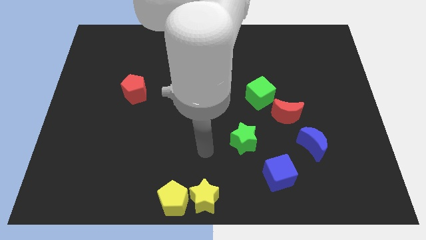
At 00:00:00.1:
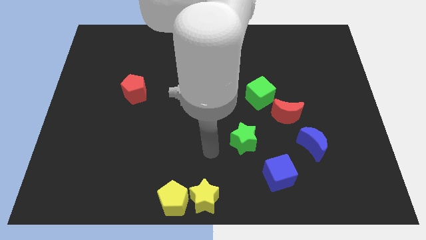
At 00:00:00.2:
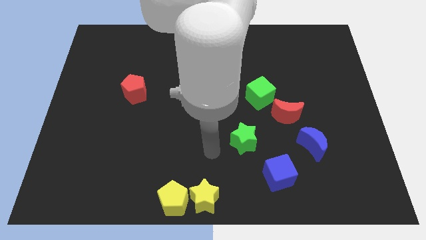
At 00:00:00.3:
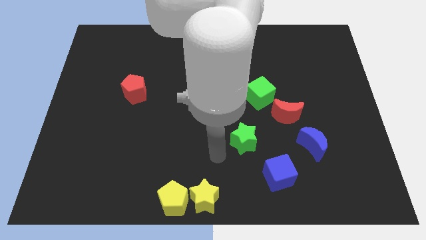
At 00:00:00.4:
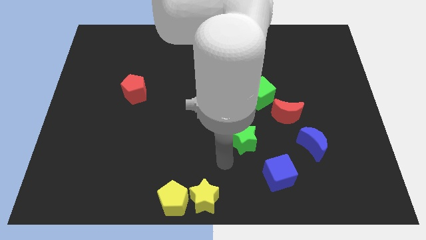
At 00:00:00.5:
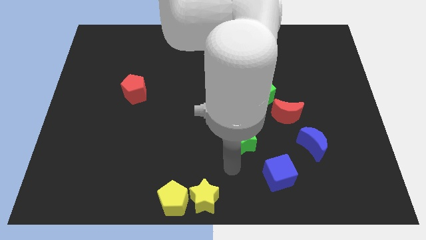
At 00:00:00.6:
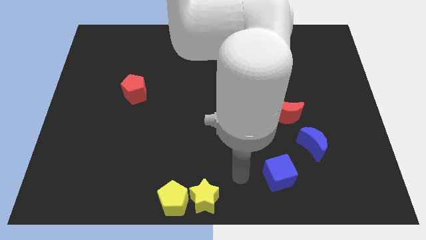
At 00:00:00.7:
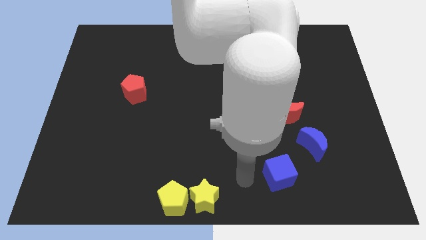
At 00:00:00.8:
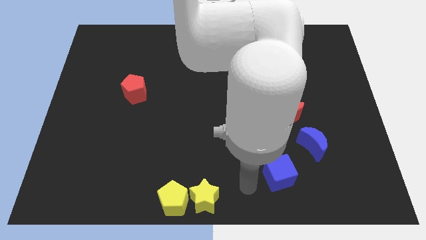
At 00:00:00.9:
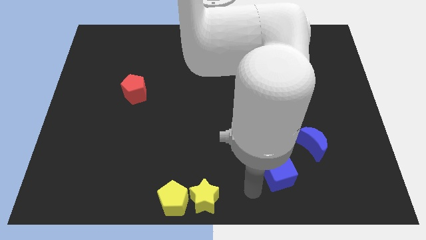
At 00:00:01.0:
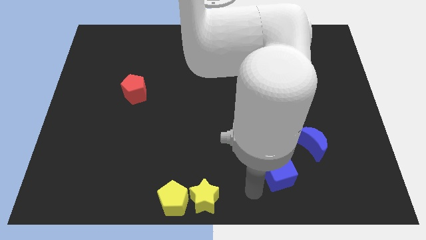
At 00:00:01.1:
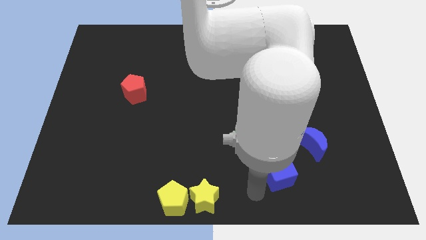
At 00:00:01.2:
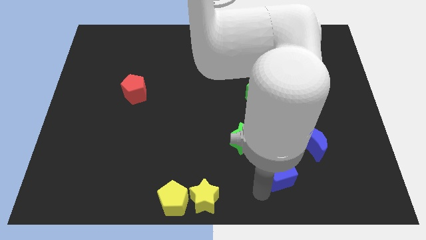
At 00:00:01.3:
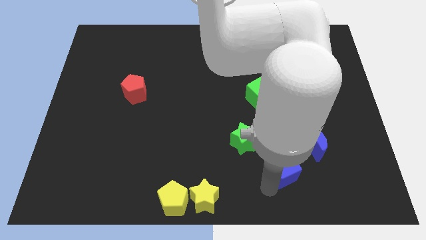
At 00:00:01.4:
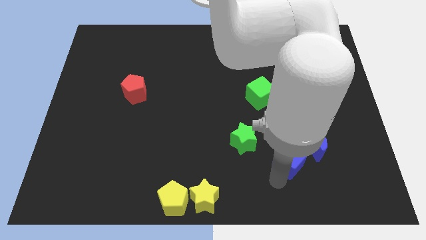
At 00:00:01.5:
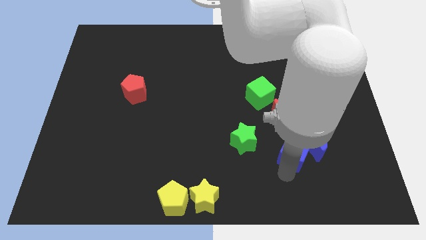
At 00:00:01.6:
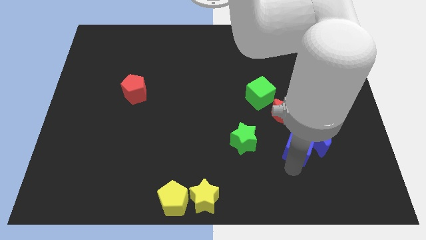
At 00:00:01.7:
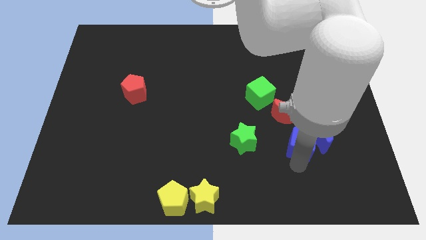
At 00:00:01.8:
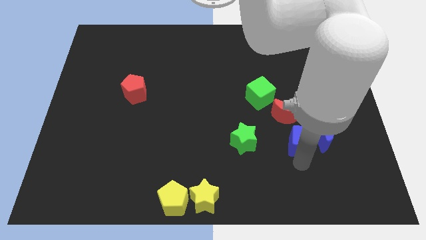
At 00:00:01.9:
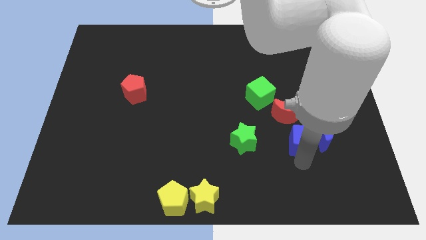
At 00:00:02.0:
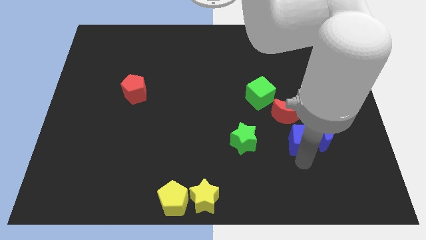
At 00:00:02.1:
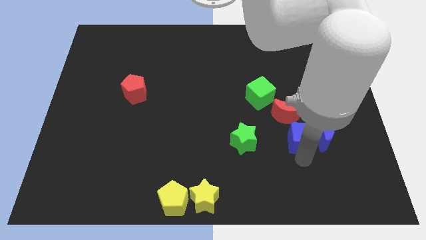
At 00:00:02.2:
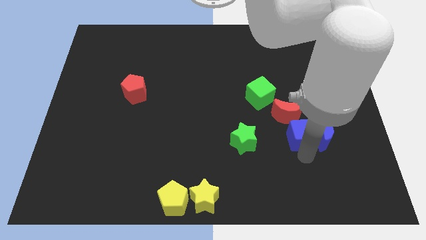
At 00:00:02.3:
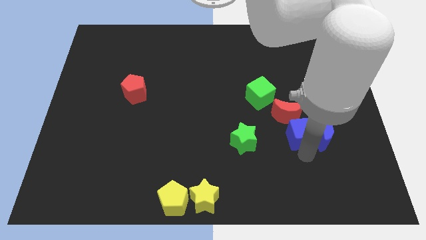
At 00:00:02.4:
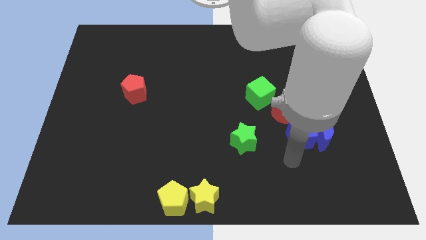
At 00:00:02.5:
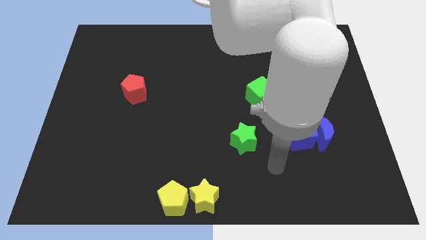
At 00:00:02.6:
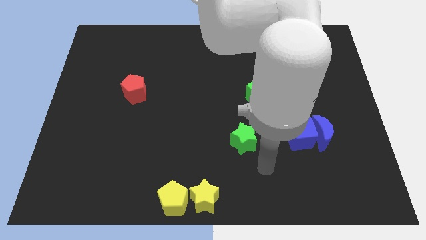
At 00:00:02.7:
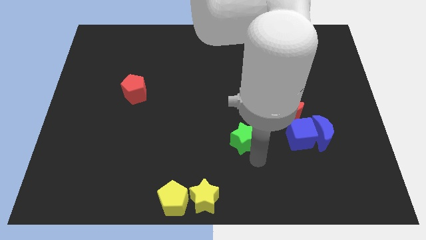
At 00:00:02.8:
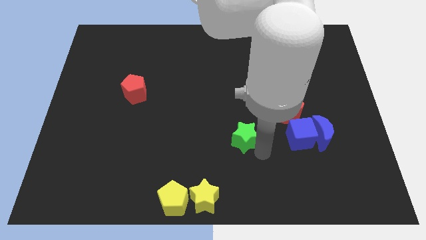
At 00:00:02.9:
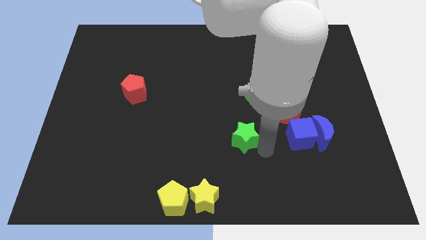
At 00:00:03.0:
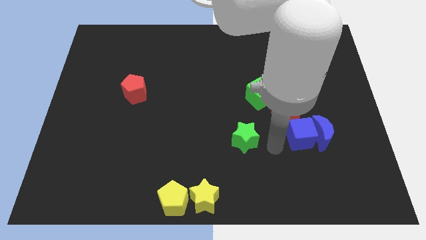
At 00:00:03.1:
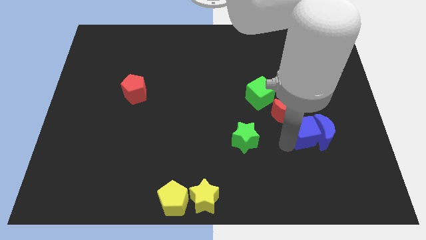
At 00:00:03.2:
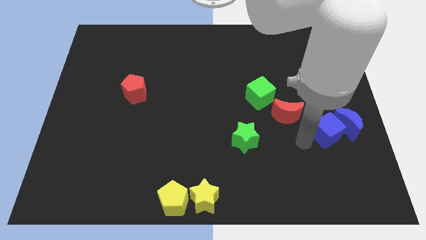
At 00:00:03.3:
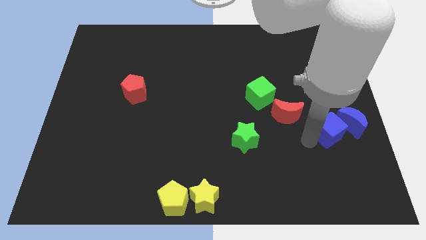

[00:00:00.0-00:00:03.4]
push the blue cube into the blue moon

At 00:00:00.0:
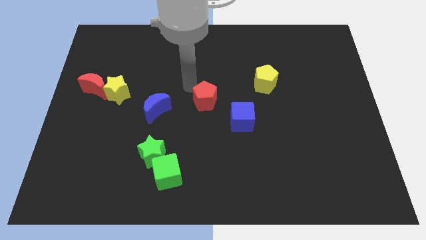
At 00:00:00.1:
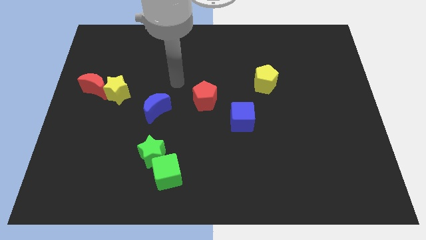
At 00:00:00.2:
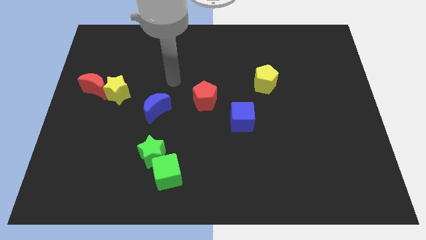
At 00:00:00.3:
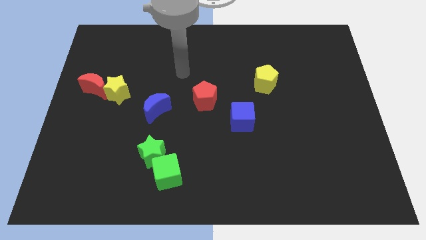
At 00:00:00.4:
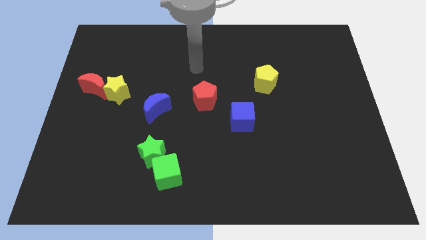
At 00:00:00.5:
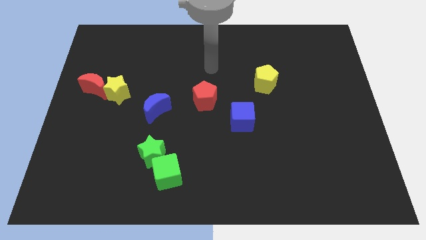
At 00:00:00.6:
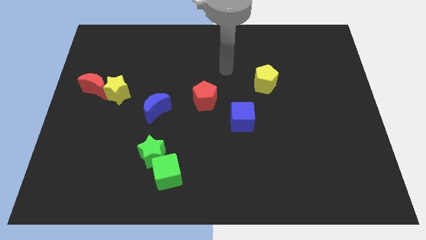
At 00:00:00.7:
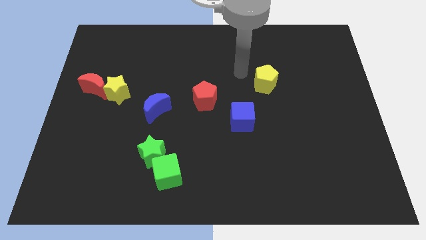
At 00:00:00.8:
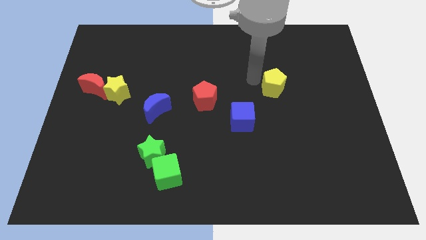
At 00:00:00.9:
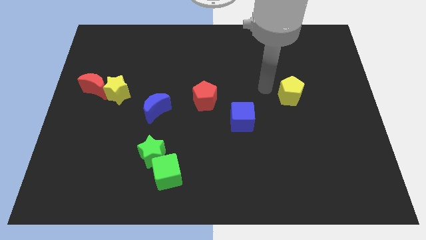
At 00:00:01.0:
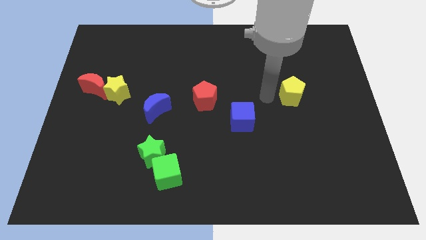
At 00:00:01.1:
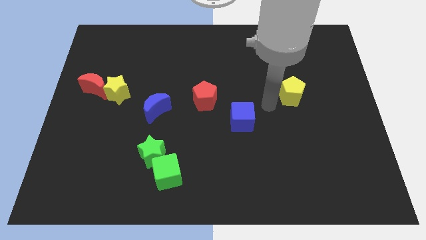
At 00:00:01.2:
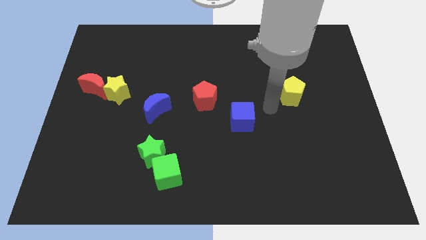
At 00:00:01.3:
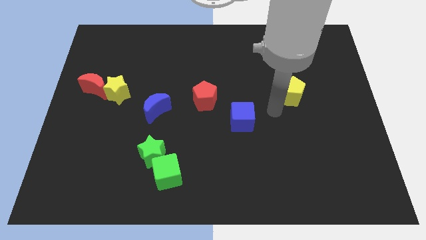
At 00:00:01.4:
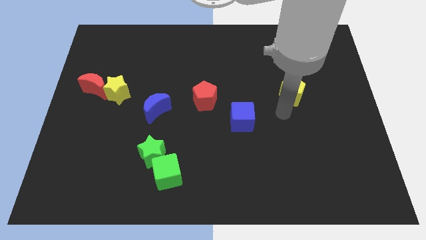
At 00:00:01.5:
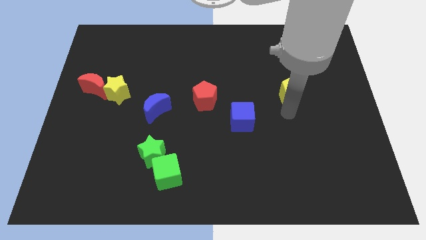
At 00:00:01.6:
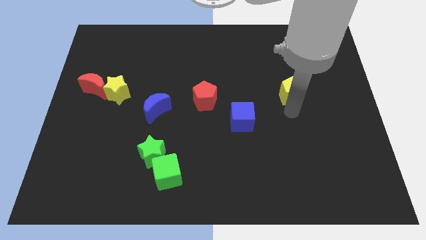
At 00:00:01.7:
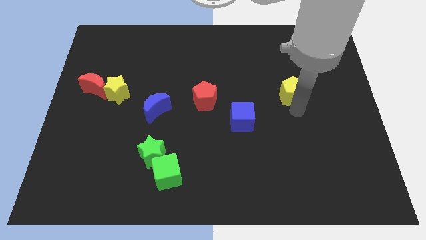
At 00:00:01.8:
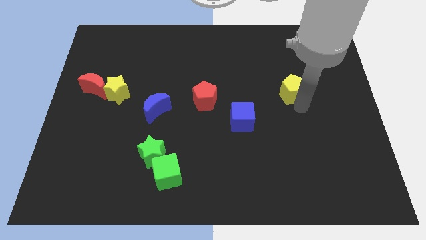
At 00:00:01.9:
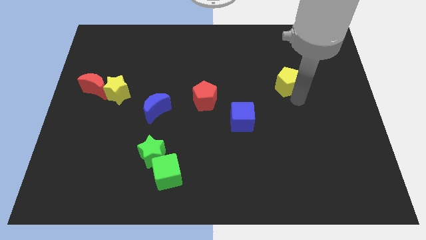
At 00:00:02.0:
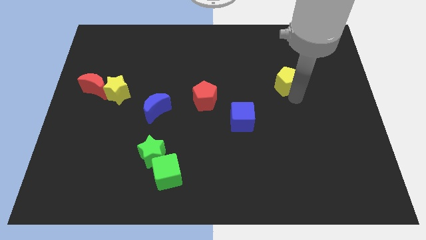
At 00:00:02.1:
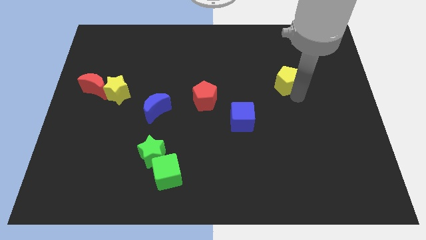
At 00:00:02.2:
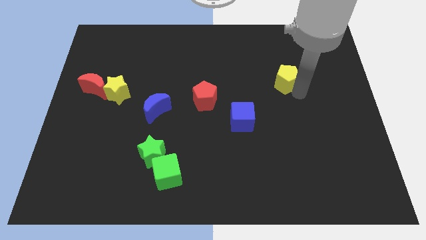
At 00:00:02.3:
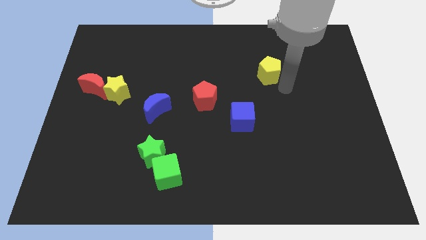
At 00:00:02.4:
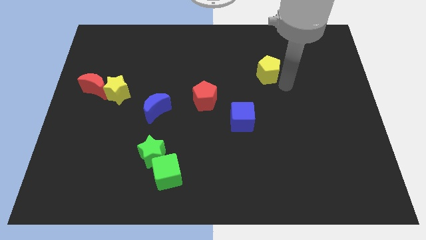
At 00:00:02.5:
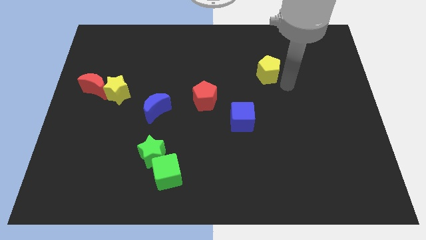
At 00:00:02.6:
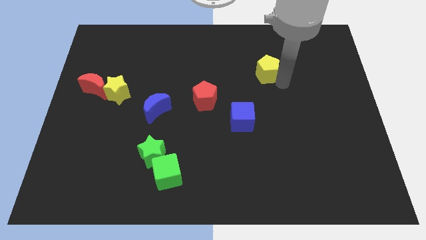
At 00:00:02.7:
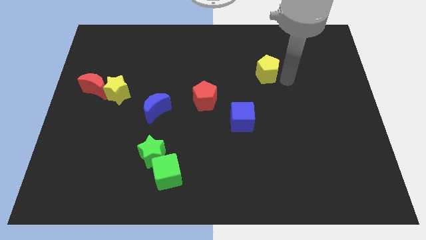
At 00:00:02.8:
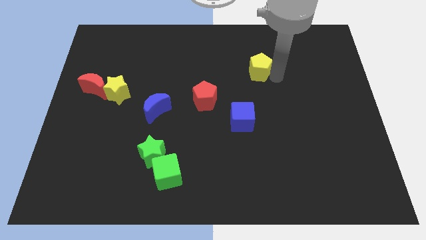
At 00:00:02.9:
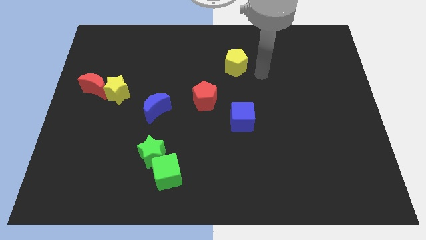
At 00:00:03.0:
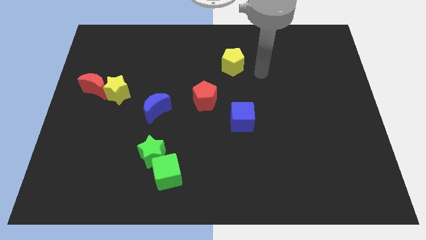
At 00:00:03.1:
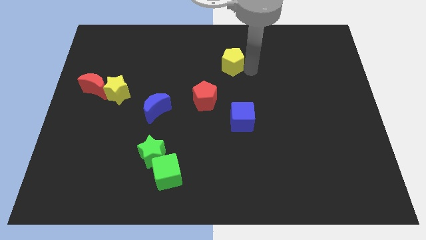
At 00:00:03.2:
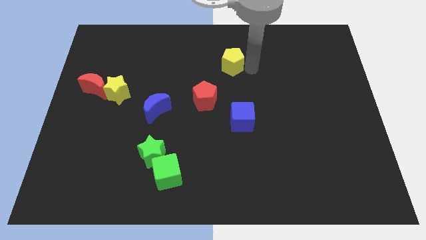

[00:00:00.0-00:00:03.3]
place the yellow pentagon vertically above the blue cube

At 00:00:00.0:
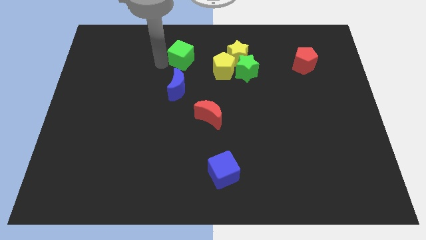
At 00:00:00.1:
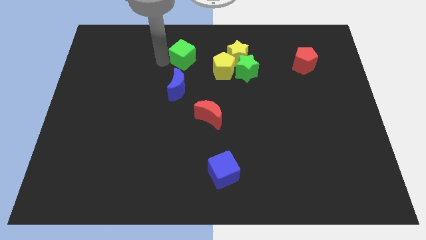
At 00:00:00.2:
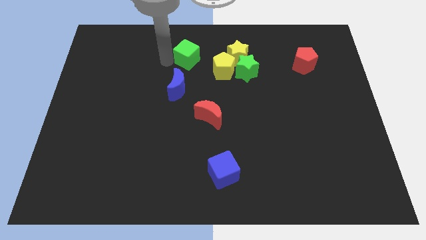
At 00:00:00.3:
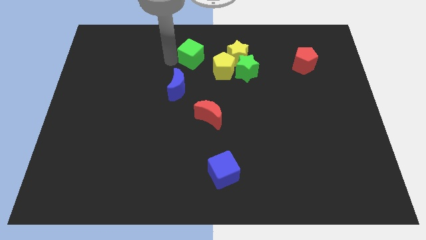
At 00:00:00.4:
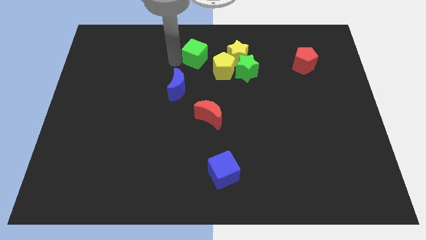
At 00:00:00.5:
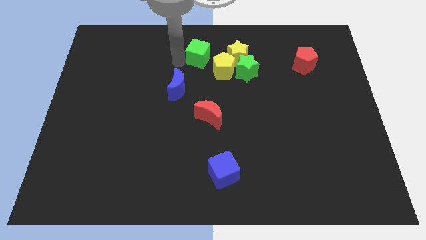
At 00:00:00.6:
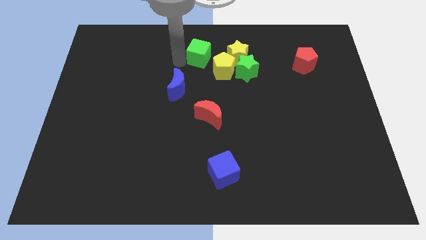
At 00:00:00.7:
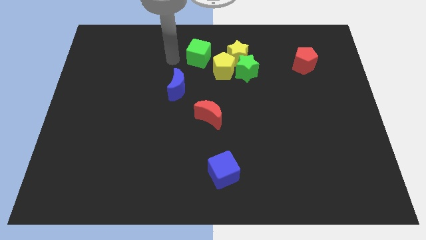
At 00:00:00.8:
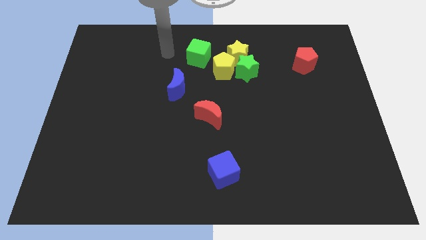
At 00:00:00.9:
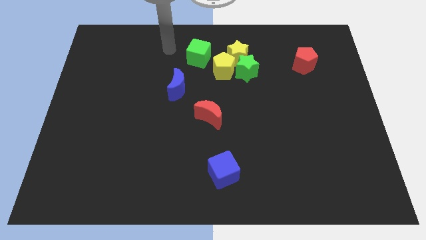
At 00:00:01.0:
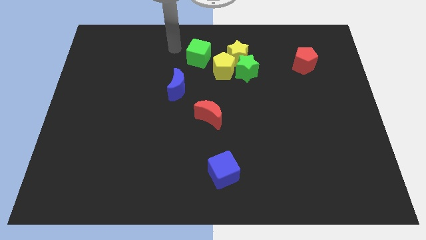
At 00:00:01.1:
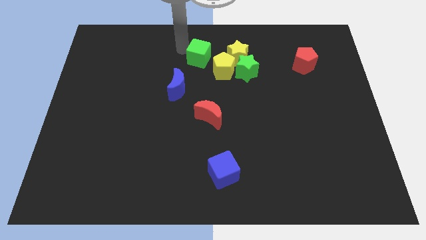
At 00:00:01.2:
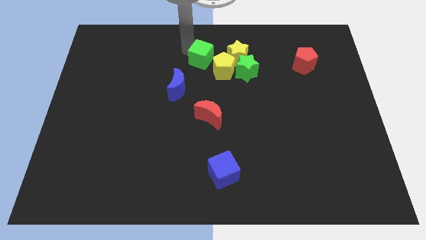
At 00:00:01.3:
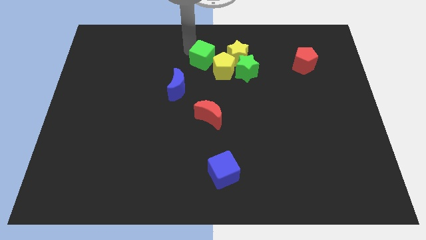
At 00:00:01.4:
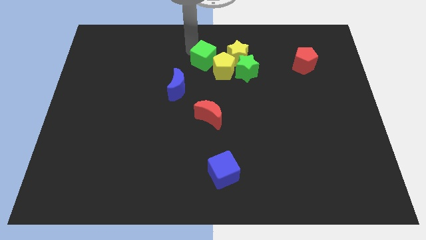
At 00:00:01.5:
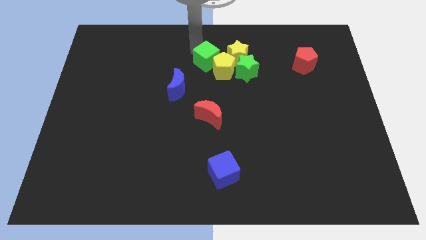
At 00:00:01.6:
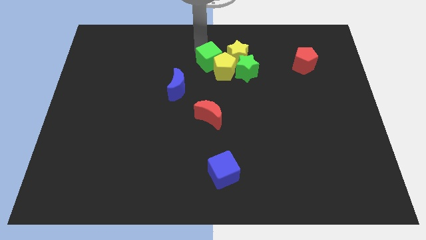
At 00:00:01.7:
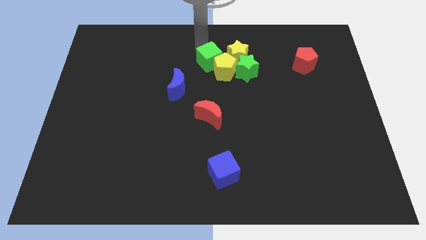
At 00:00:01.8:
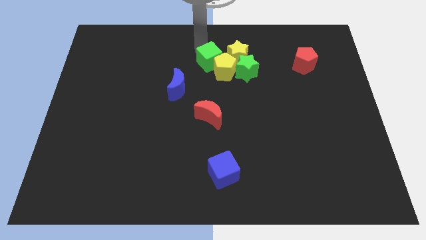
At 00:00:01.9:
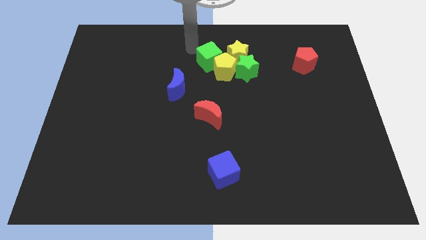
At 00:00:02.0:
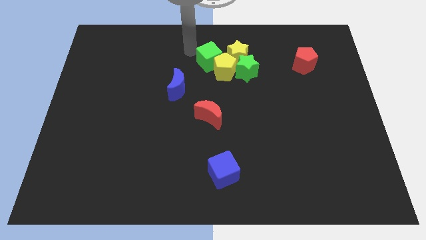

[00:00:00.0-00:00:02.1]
move the green cube into the yellow pentagon
